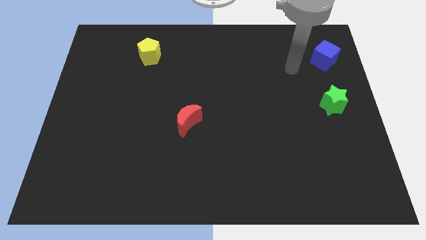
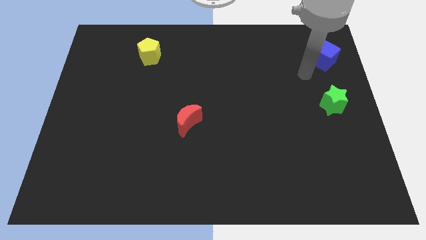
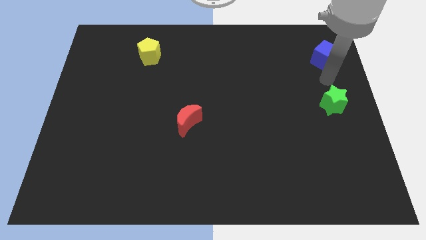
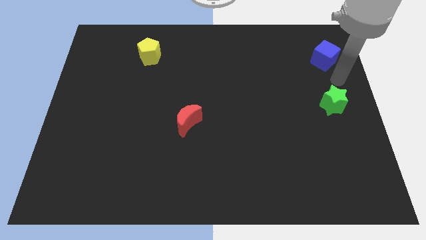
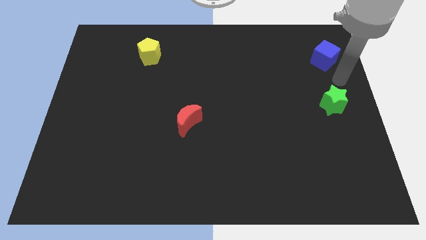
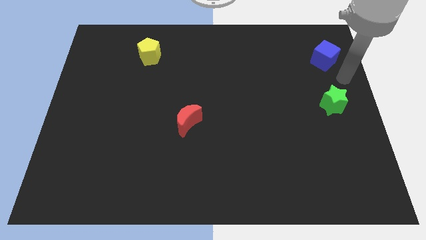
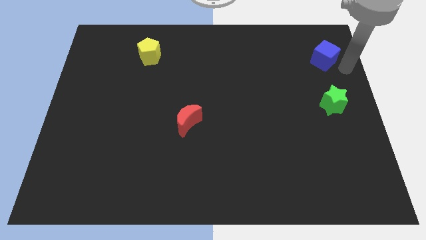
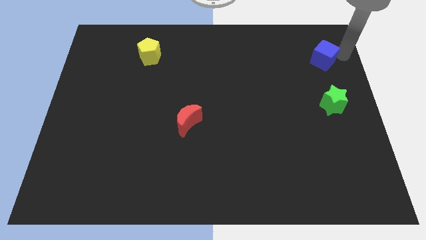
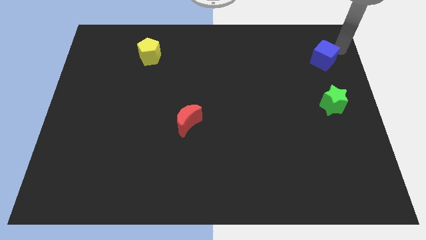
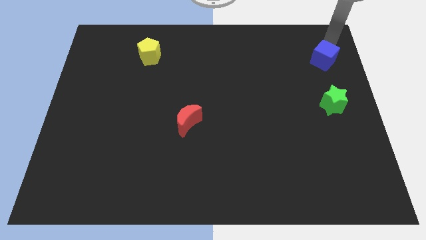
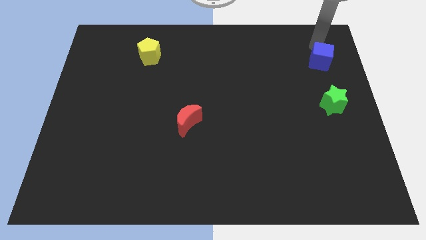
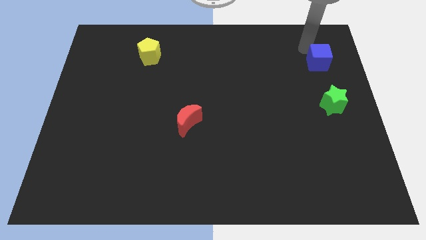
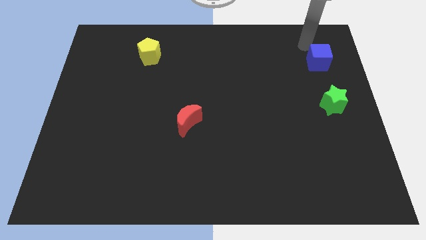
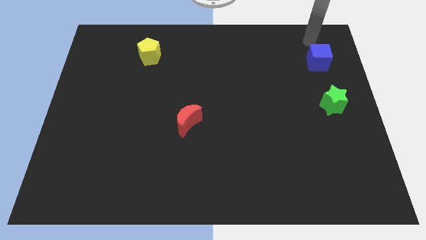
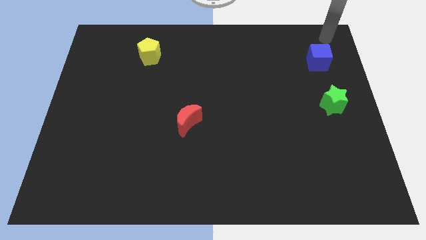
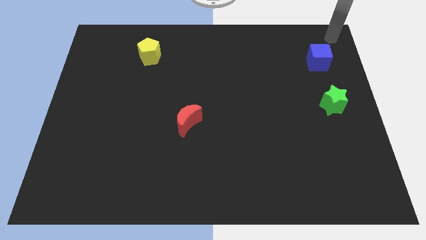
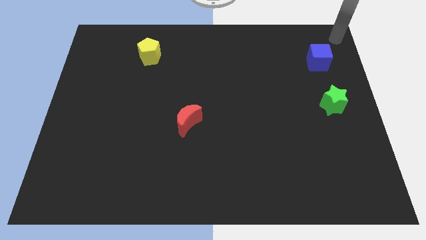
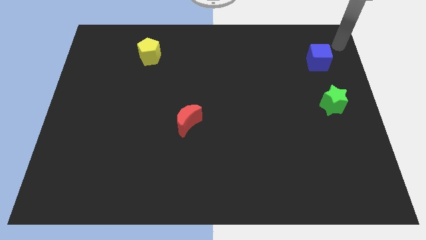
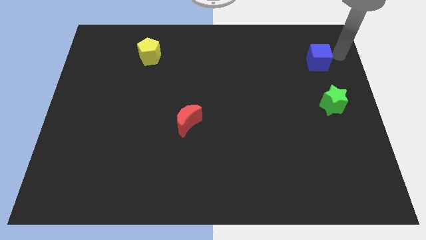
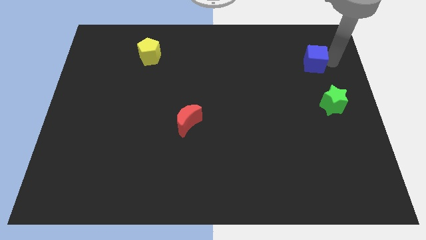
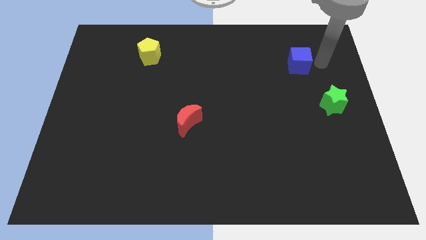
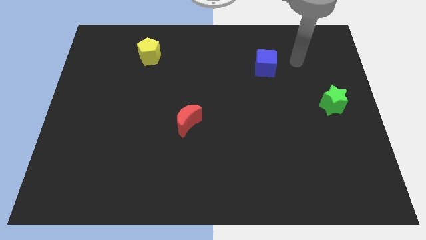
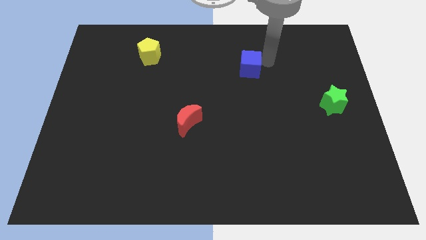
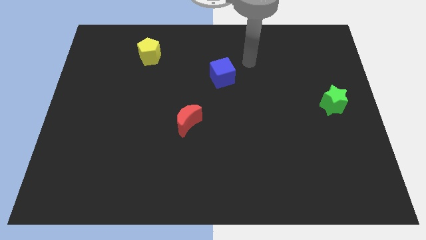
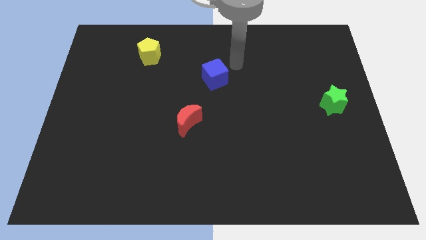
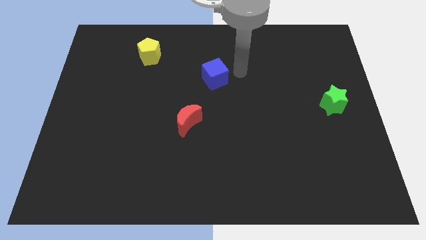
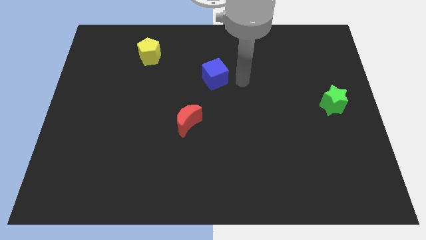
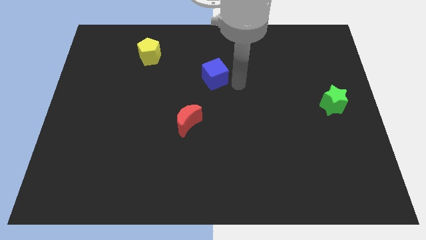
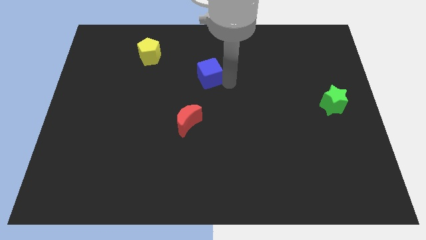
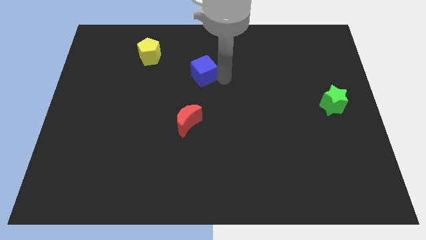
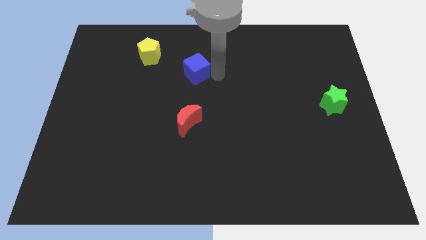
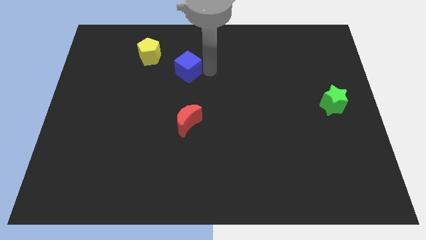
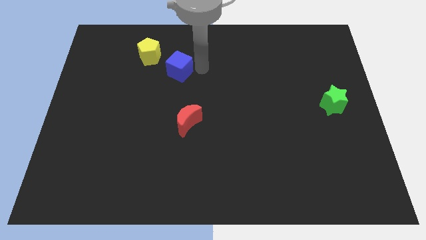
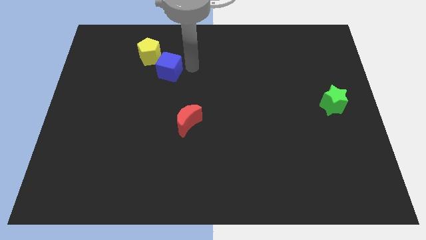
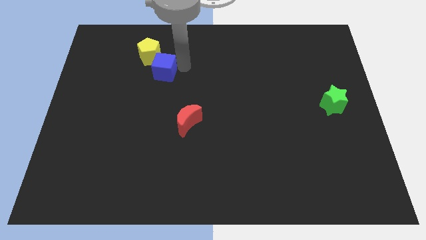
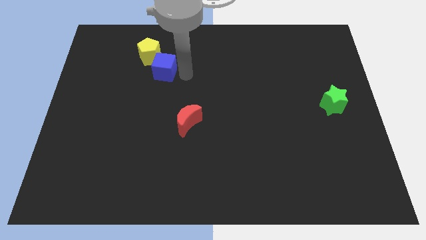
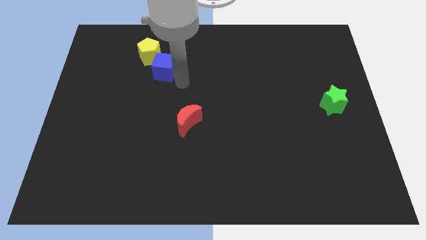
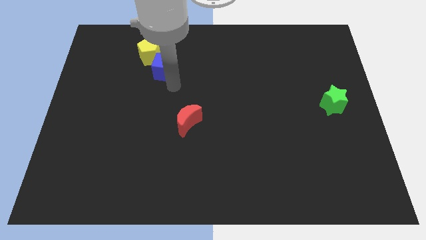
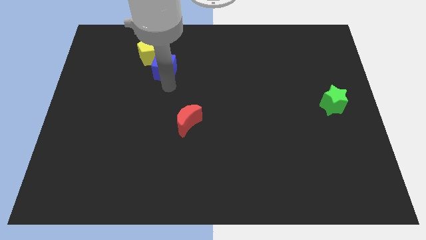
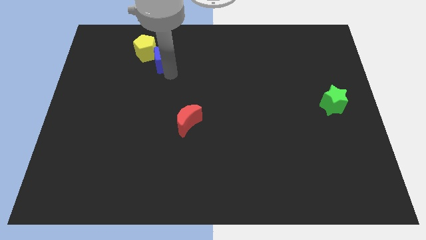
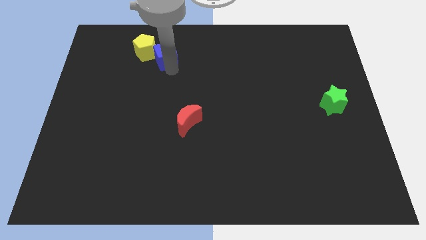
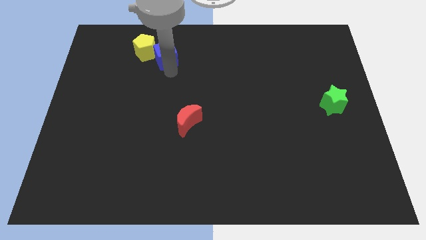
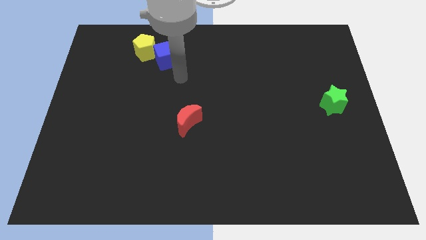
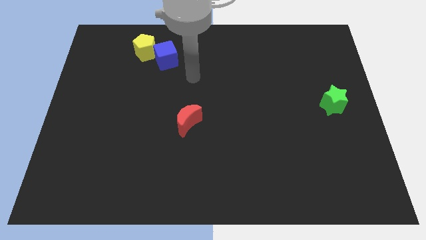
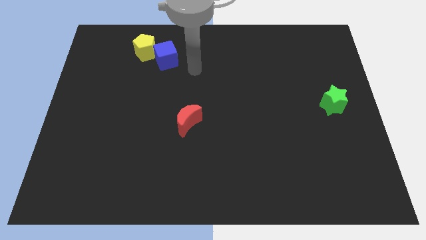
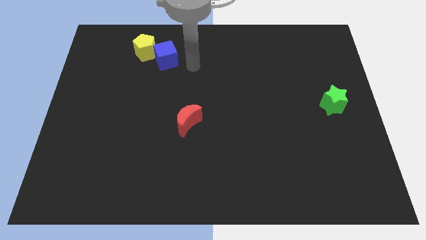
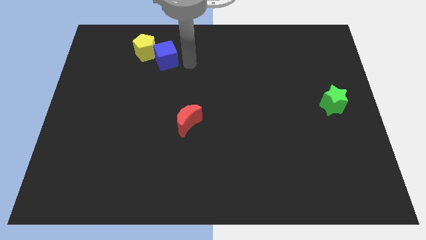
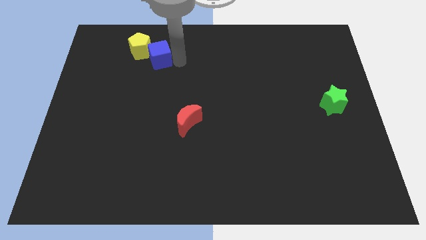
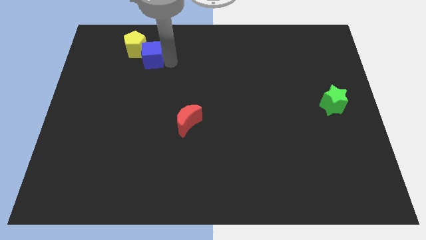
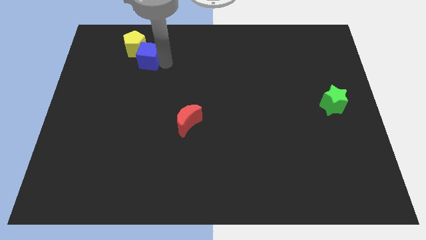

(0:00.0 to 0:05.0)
move the cube towards the pentagon

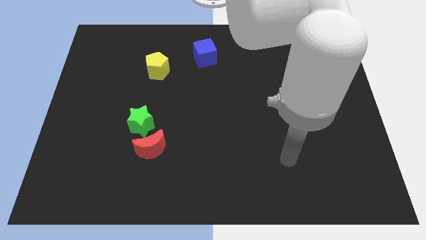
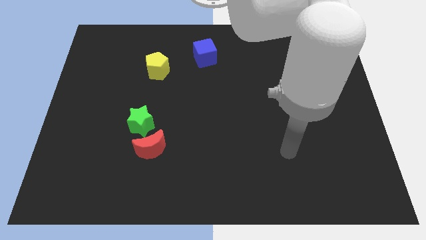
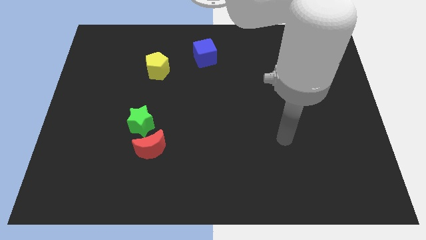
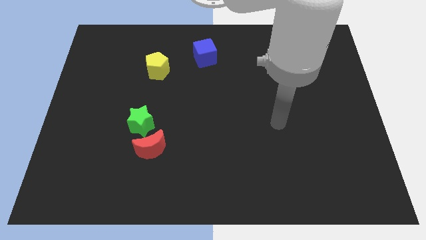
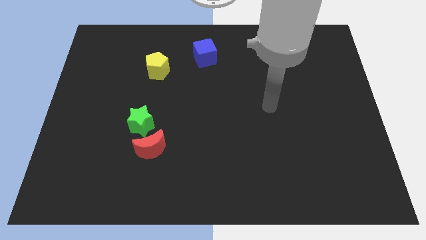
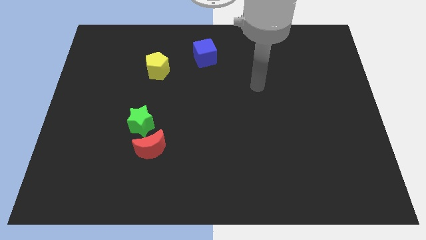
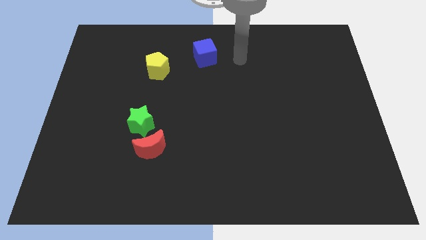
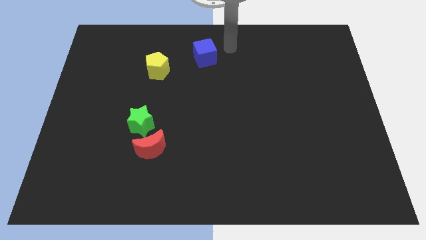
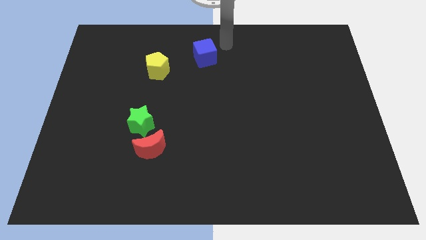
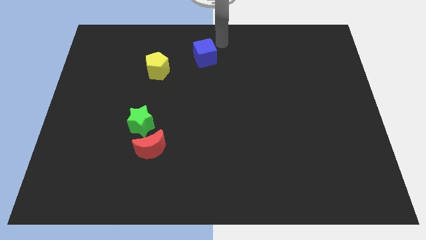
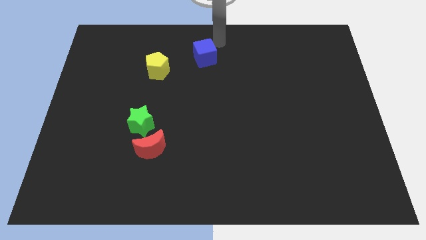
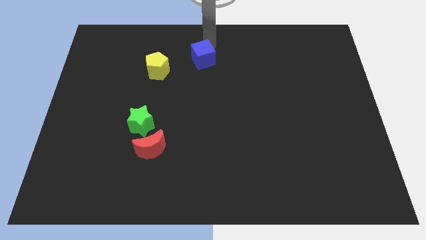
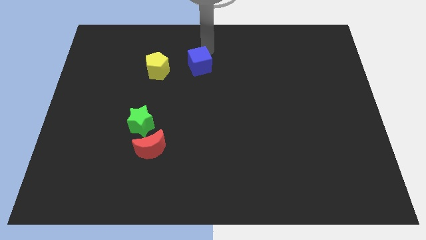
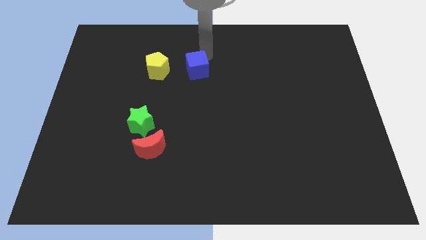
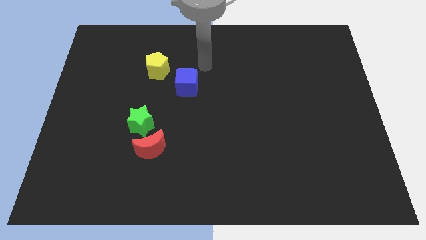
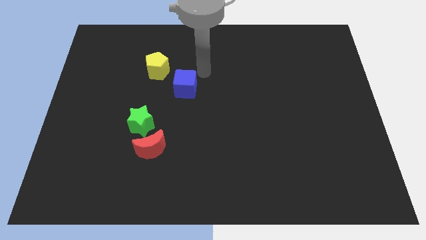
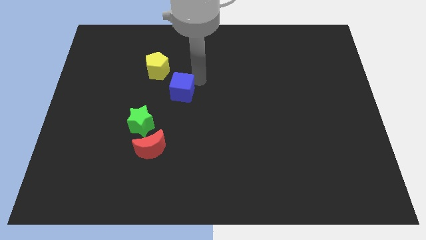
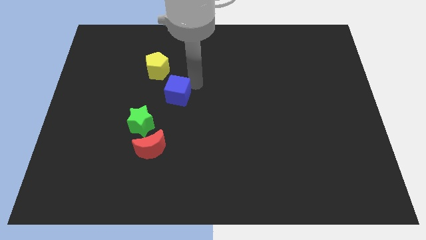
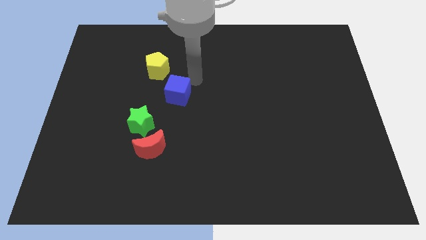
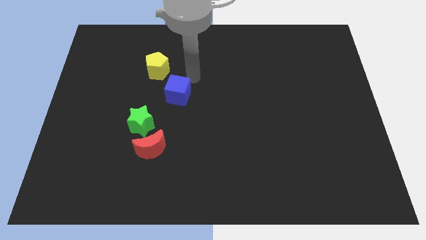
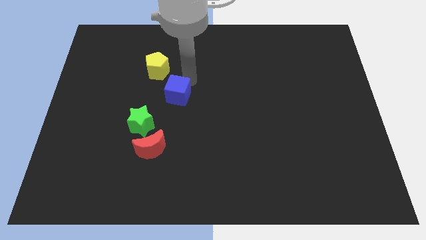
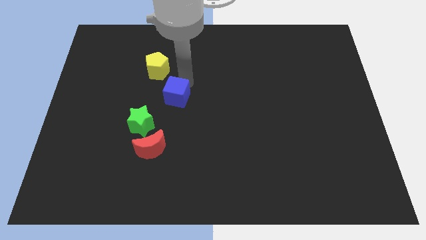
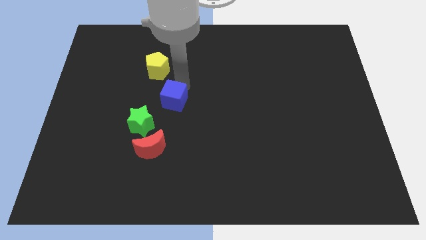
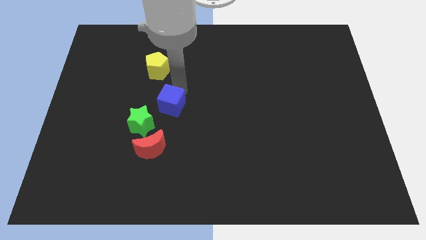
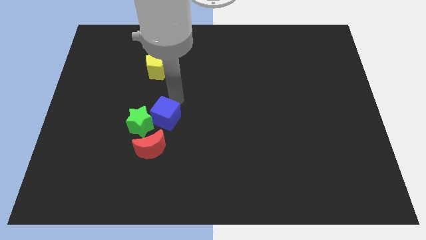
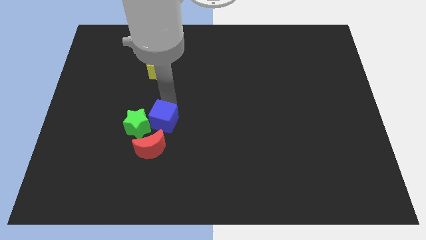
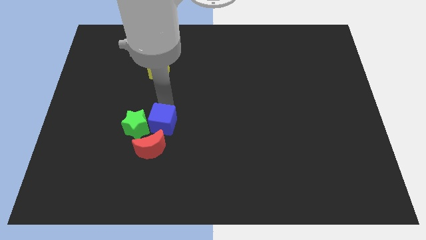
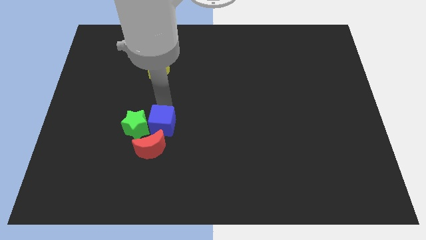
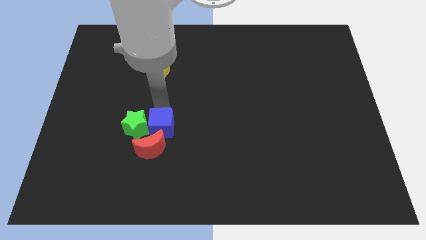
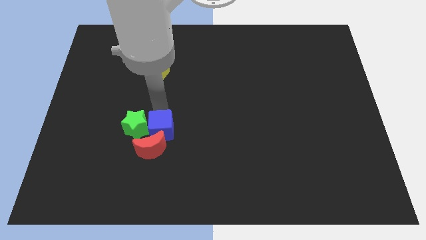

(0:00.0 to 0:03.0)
slide the cube to the red block

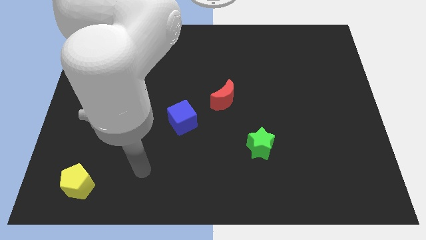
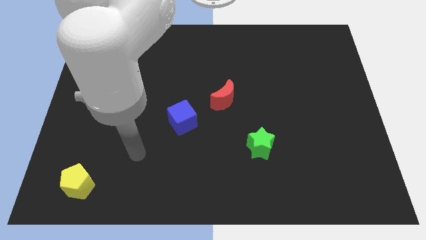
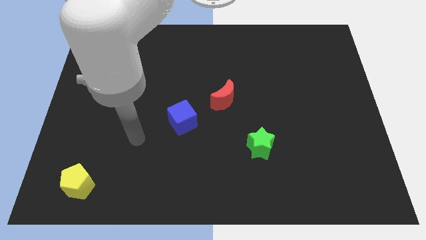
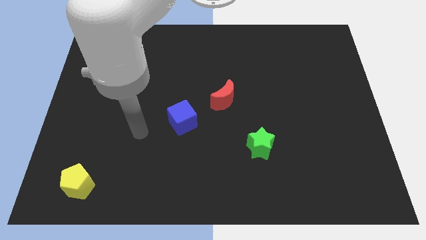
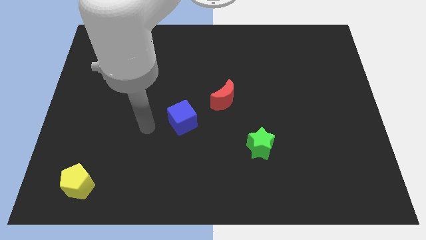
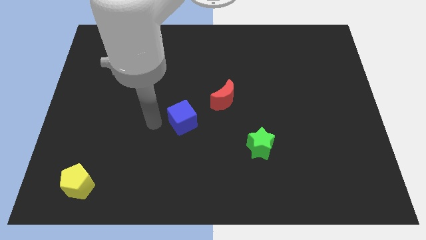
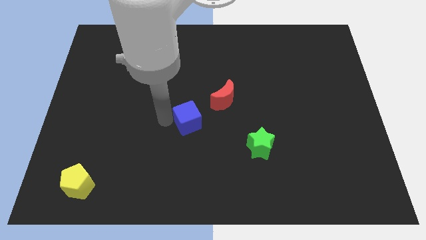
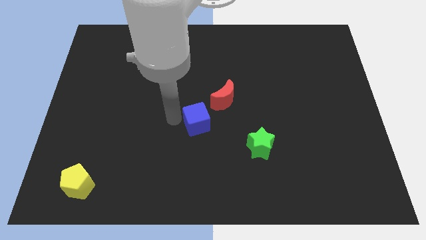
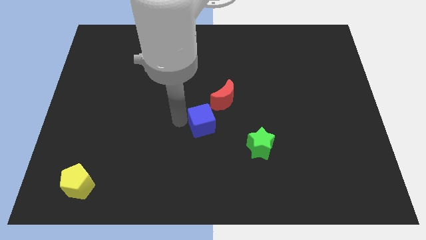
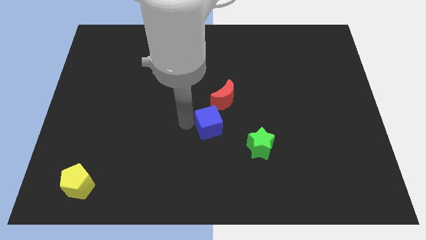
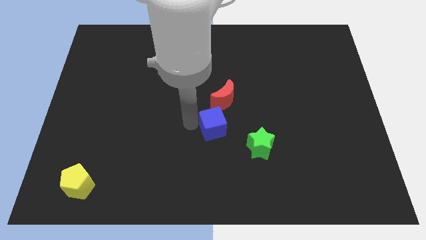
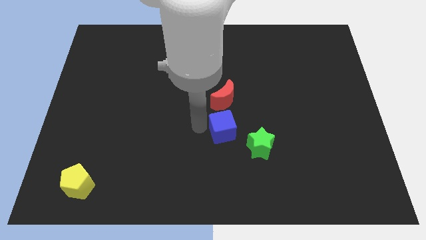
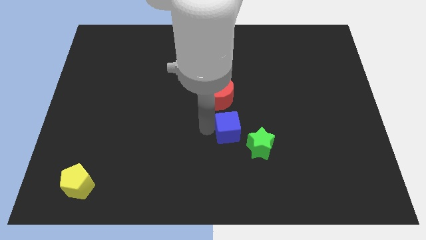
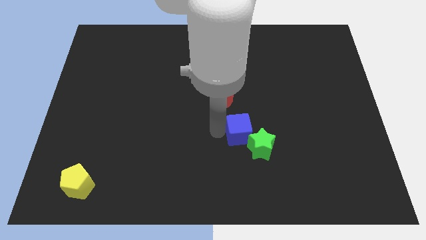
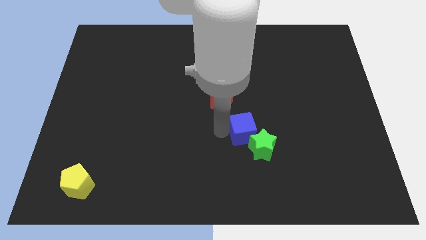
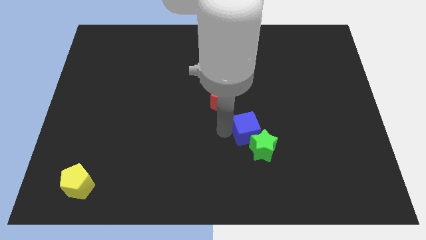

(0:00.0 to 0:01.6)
push the blue block to the green star
